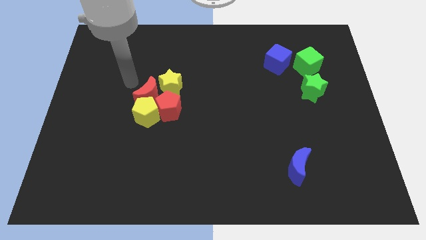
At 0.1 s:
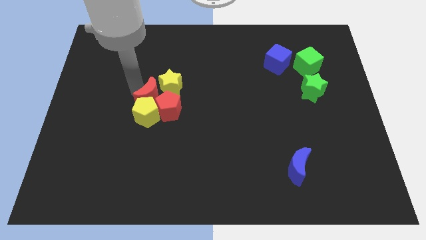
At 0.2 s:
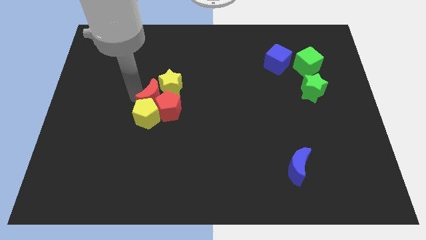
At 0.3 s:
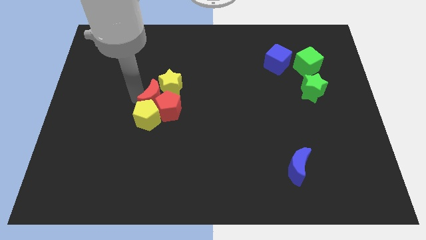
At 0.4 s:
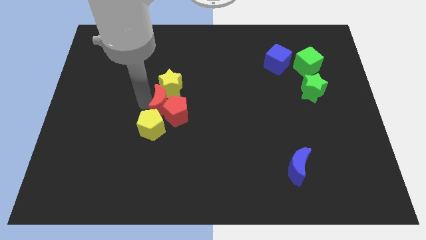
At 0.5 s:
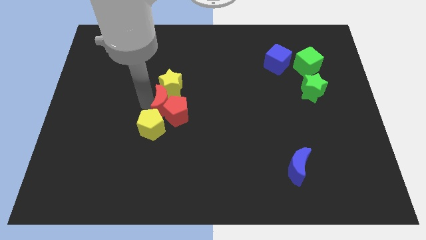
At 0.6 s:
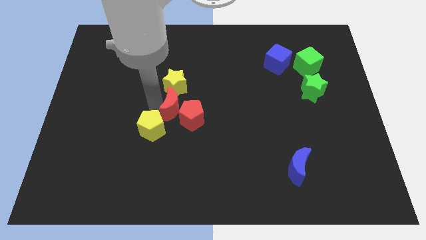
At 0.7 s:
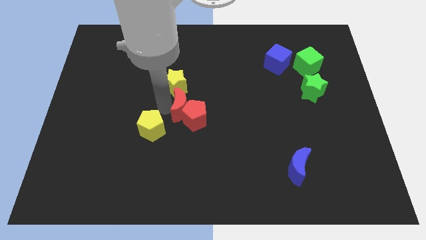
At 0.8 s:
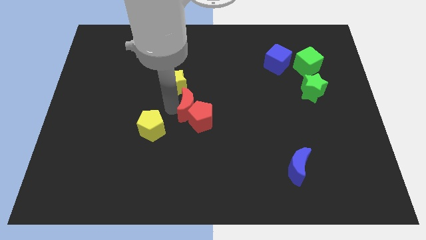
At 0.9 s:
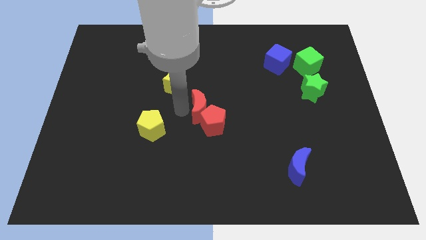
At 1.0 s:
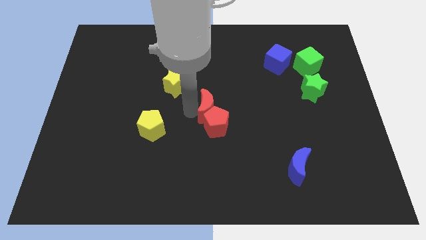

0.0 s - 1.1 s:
move red blocks slightly to the right side of the board

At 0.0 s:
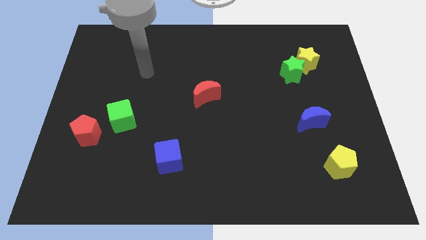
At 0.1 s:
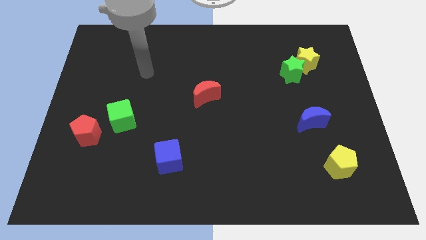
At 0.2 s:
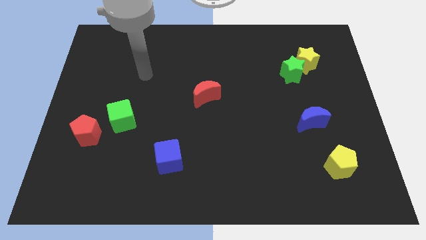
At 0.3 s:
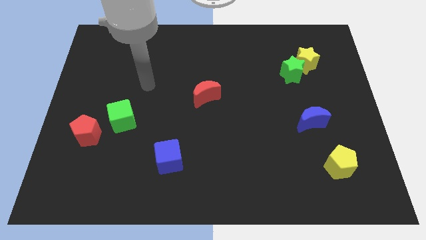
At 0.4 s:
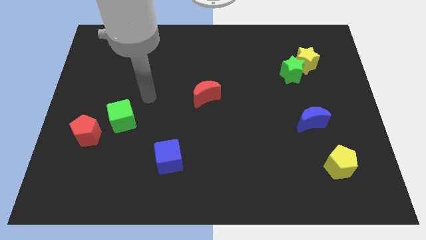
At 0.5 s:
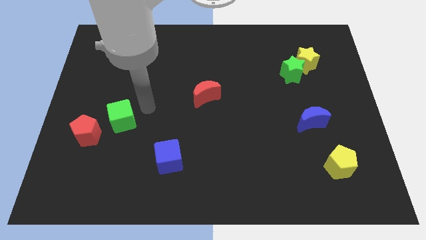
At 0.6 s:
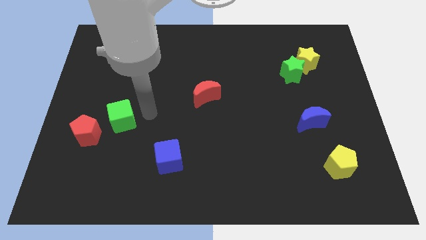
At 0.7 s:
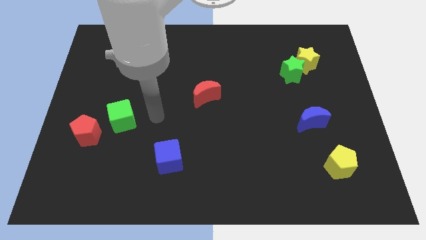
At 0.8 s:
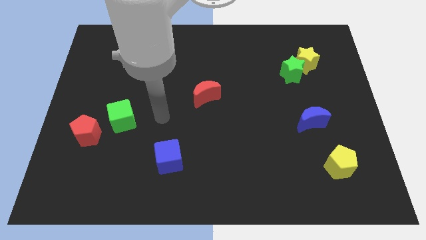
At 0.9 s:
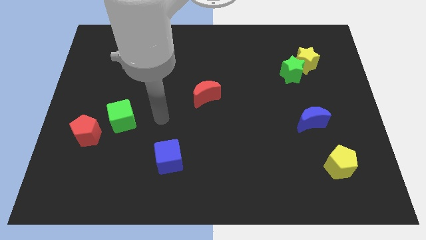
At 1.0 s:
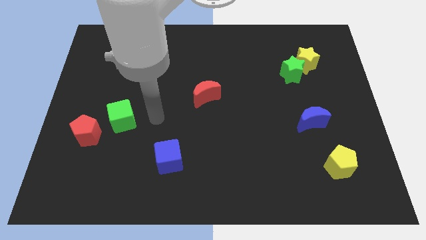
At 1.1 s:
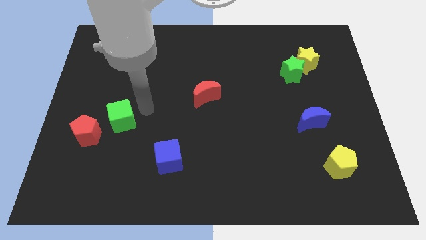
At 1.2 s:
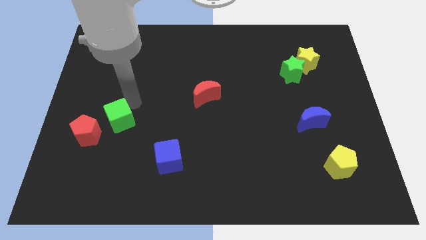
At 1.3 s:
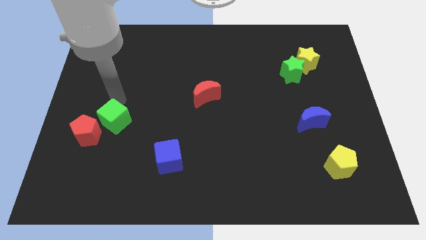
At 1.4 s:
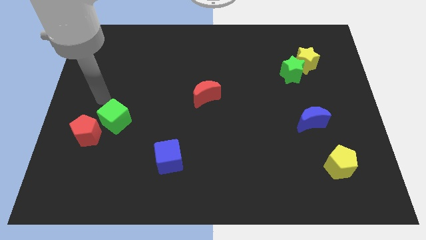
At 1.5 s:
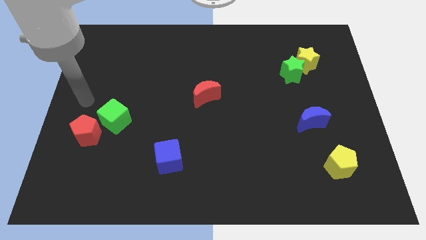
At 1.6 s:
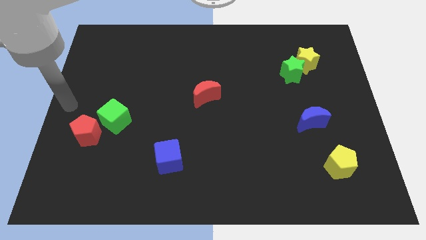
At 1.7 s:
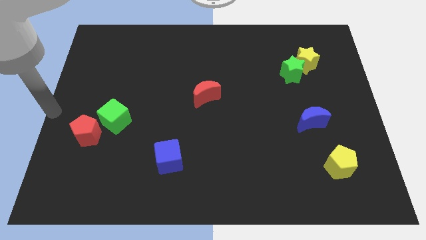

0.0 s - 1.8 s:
slightly move the green cube towards the red crescent

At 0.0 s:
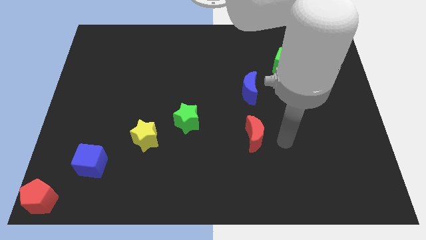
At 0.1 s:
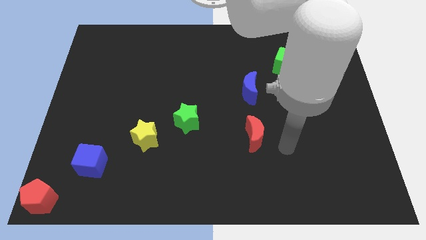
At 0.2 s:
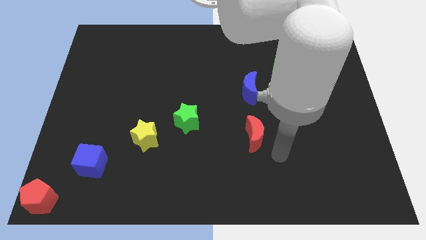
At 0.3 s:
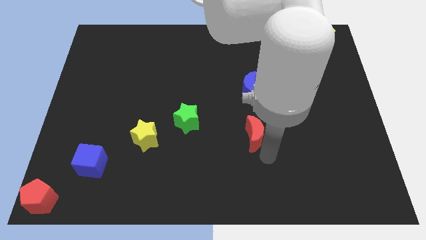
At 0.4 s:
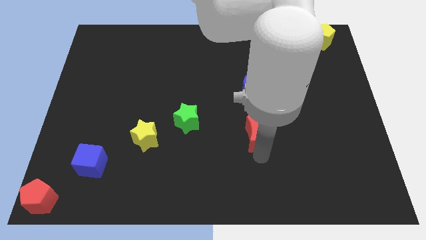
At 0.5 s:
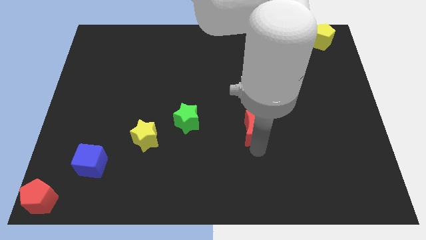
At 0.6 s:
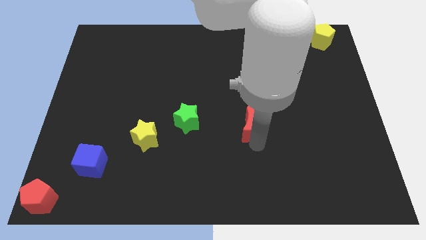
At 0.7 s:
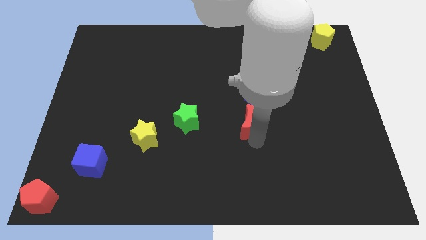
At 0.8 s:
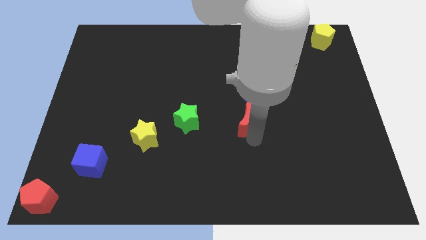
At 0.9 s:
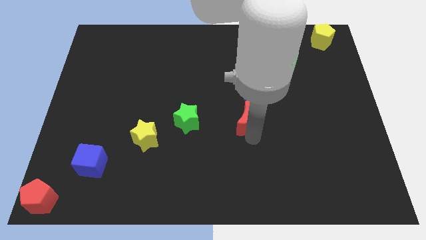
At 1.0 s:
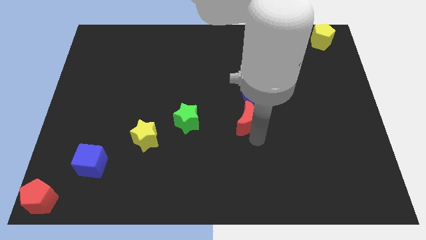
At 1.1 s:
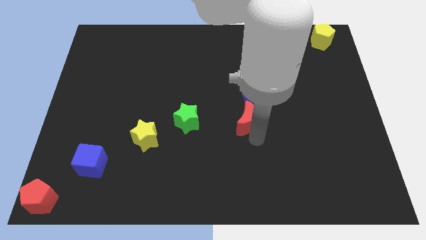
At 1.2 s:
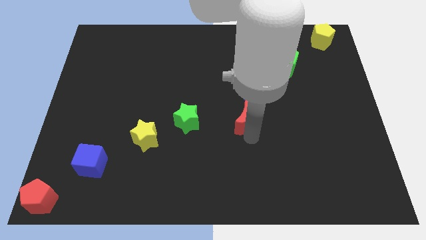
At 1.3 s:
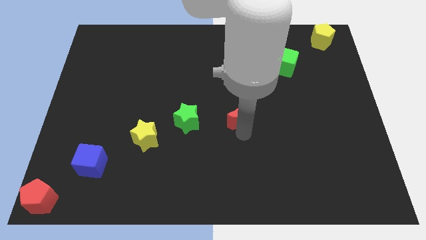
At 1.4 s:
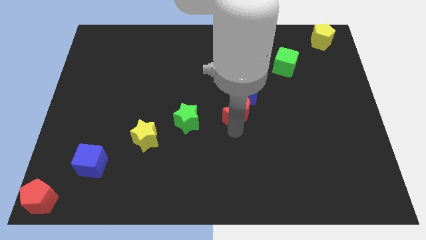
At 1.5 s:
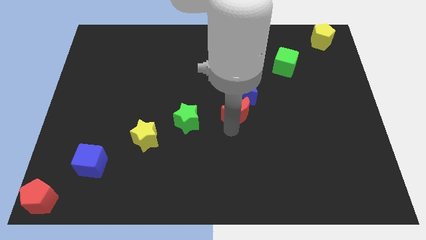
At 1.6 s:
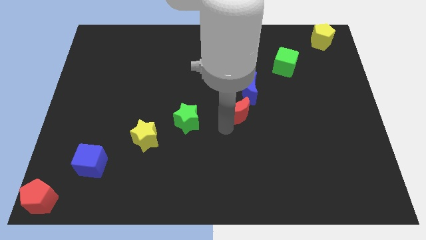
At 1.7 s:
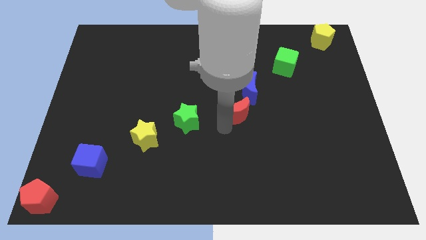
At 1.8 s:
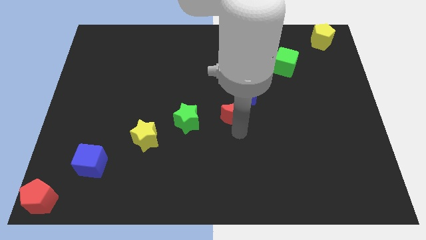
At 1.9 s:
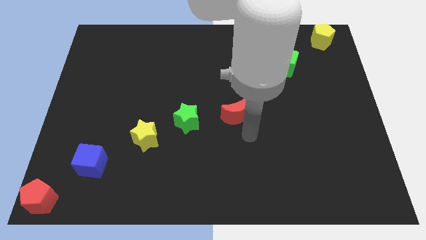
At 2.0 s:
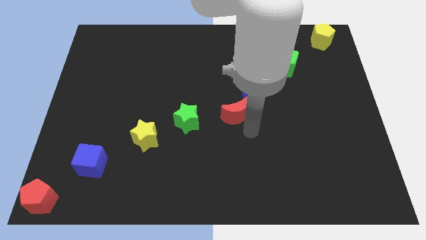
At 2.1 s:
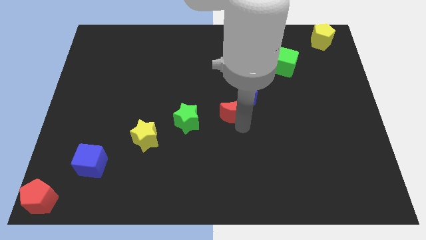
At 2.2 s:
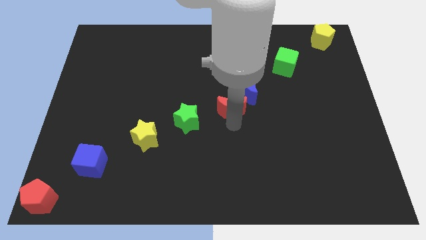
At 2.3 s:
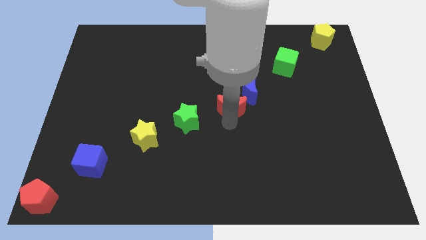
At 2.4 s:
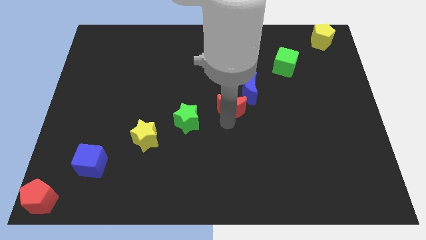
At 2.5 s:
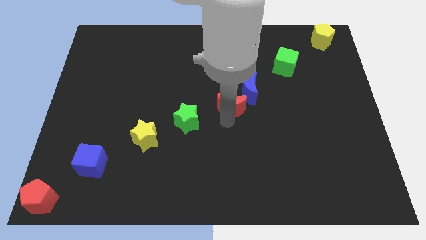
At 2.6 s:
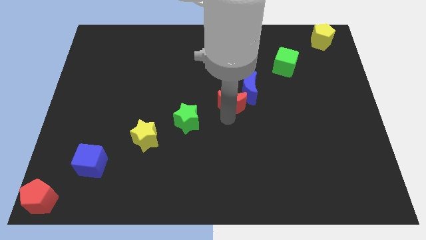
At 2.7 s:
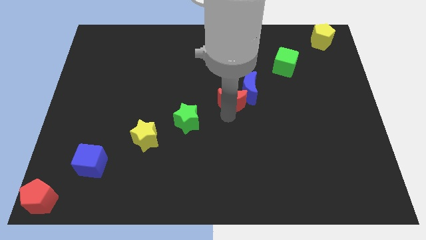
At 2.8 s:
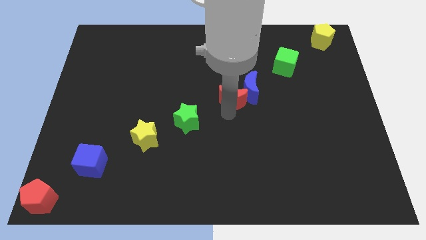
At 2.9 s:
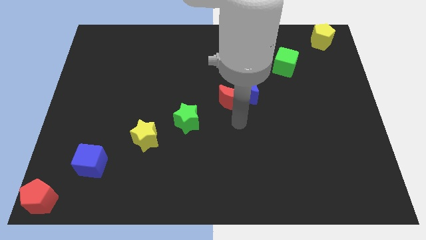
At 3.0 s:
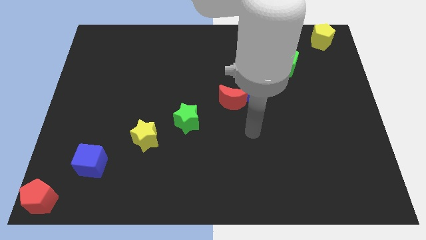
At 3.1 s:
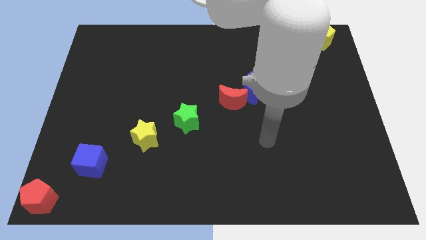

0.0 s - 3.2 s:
place red crescent between green star and blue crescent

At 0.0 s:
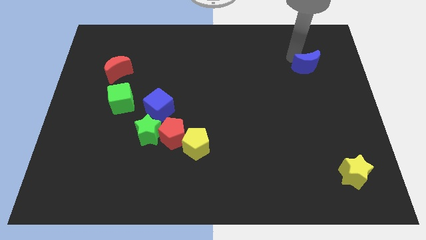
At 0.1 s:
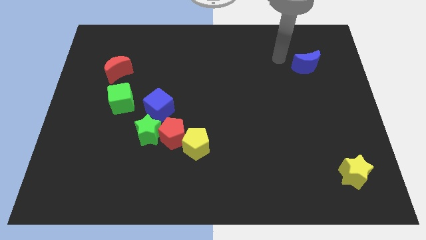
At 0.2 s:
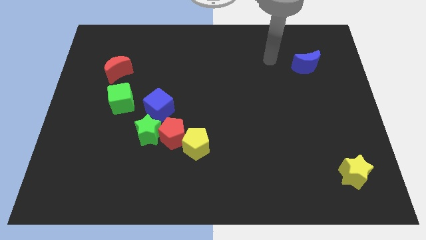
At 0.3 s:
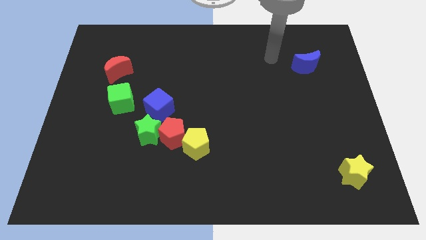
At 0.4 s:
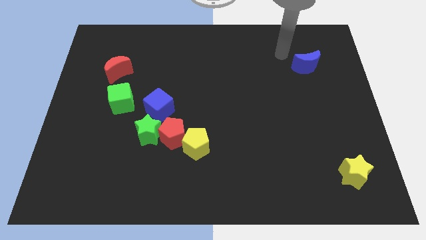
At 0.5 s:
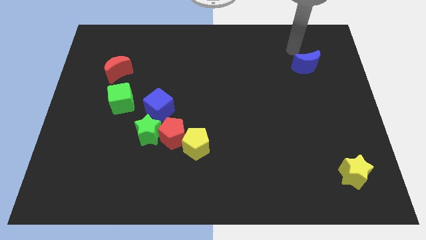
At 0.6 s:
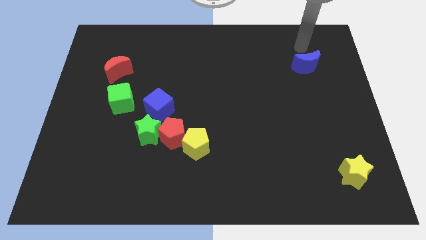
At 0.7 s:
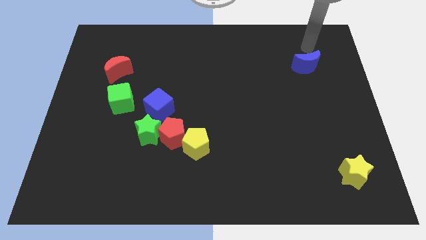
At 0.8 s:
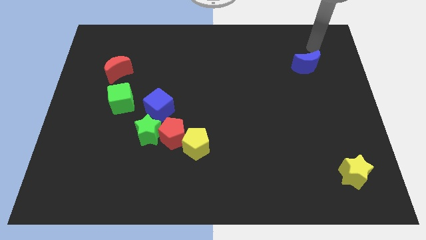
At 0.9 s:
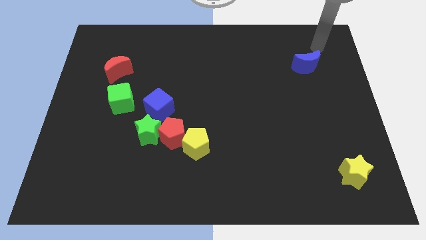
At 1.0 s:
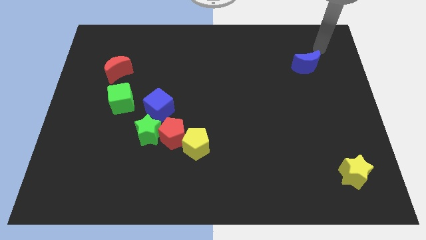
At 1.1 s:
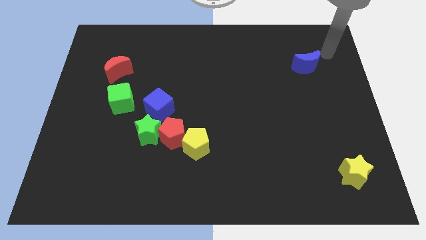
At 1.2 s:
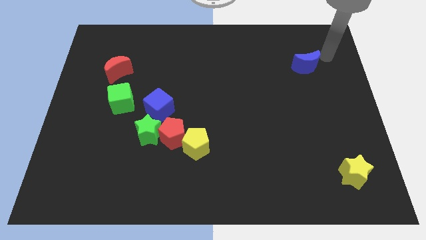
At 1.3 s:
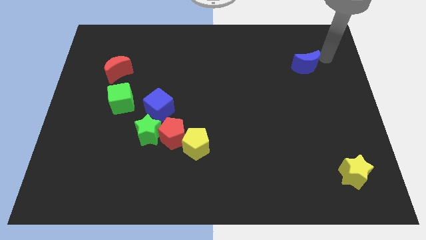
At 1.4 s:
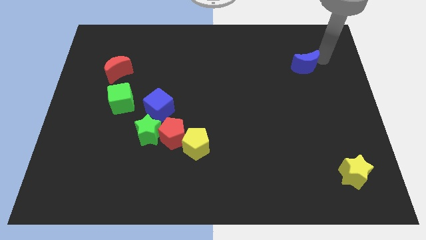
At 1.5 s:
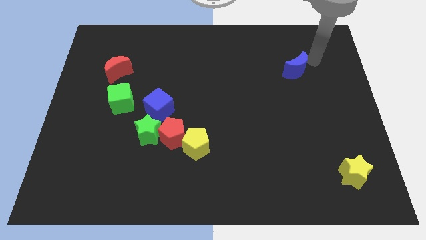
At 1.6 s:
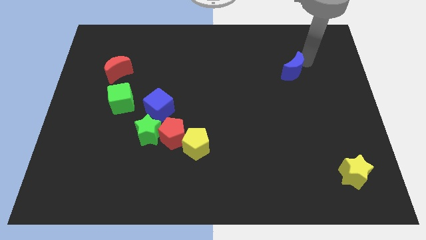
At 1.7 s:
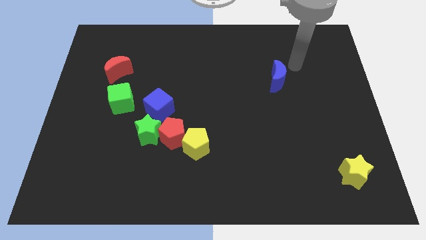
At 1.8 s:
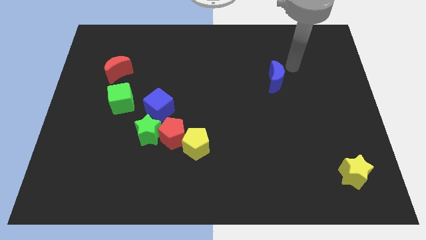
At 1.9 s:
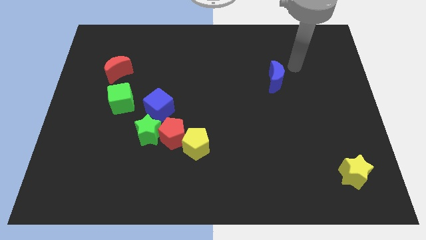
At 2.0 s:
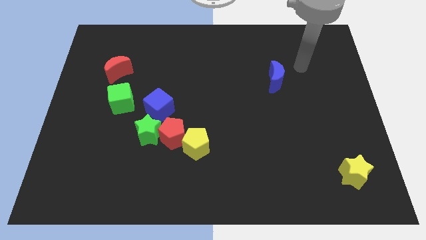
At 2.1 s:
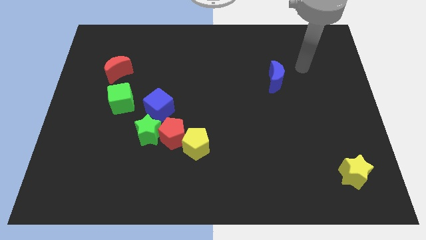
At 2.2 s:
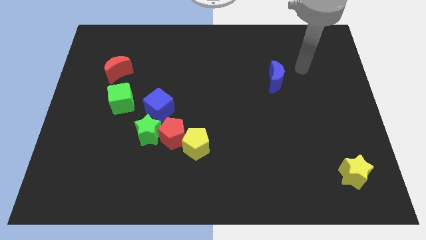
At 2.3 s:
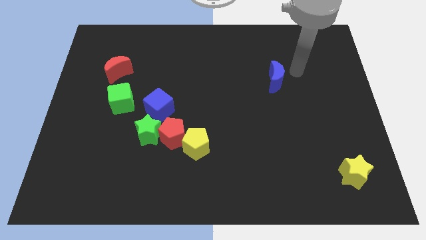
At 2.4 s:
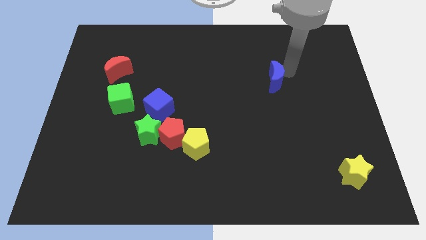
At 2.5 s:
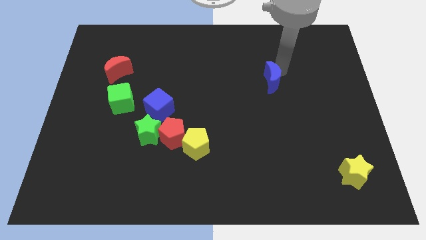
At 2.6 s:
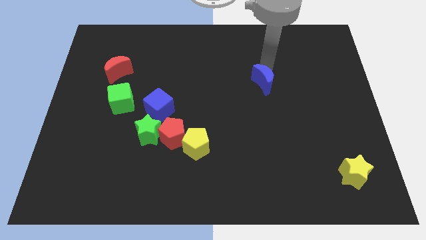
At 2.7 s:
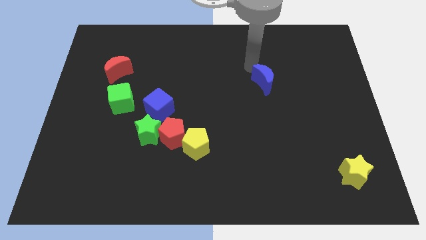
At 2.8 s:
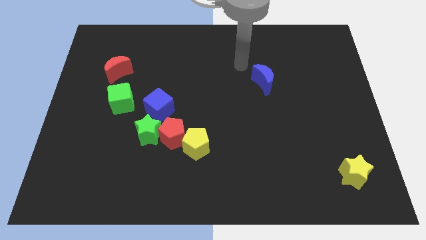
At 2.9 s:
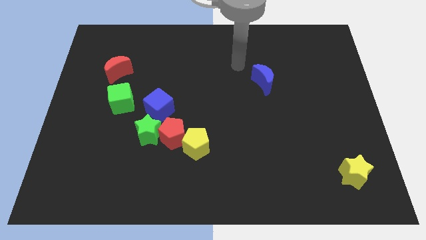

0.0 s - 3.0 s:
push the blue moon closer to the blue cube

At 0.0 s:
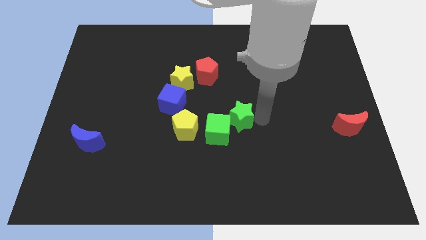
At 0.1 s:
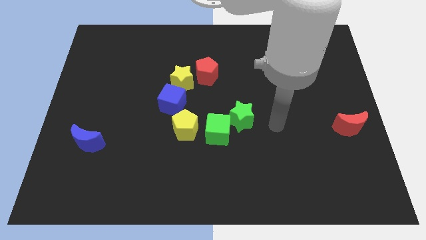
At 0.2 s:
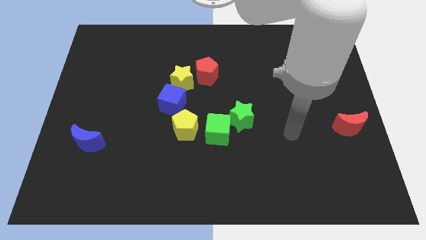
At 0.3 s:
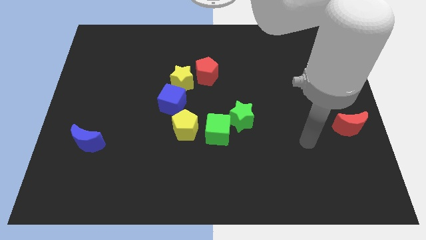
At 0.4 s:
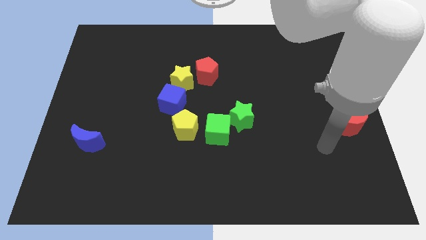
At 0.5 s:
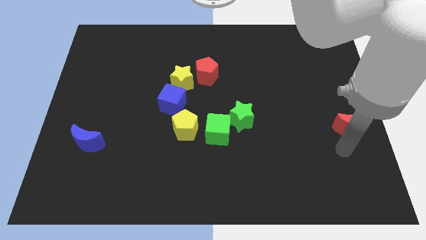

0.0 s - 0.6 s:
move the arm away from the green star
